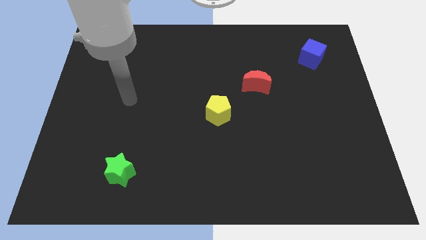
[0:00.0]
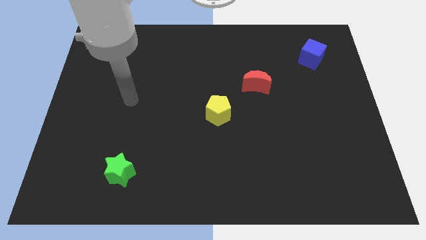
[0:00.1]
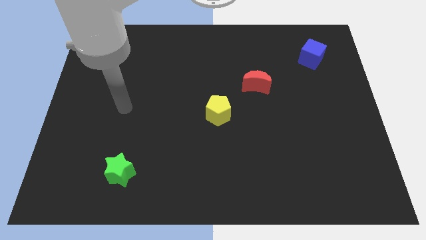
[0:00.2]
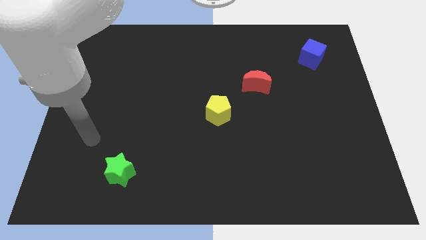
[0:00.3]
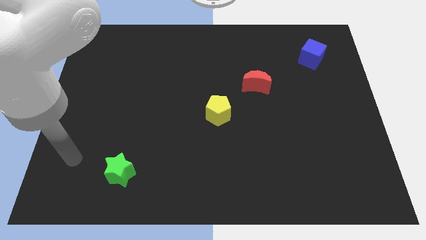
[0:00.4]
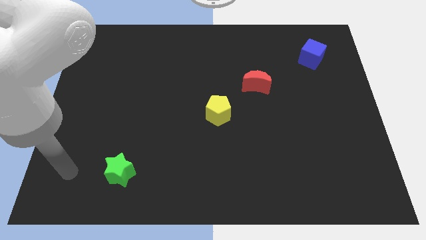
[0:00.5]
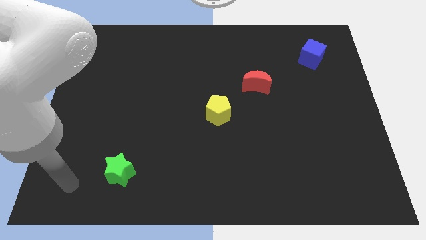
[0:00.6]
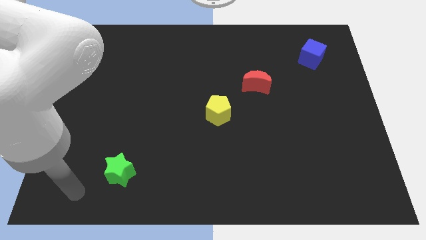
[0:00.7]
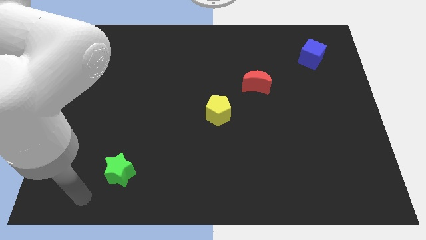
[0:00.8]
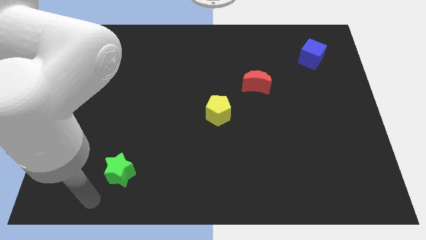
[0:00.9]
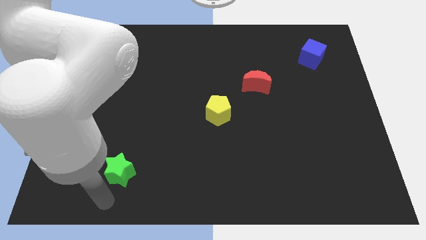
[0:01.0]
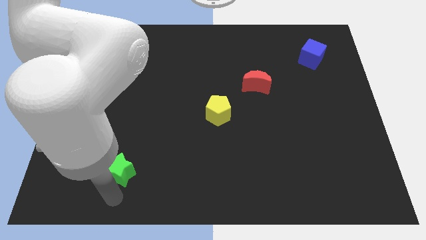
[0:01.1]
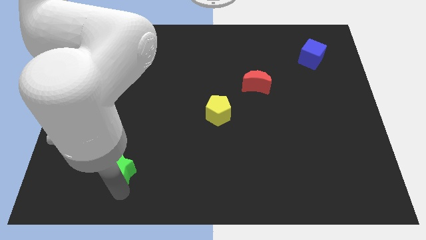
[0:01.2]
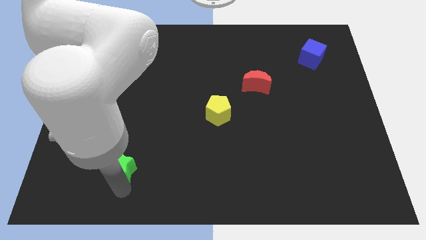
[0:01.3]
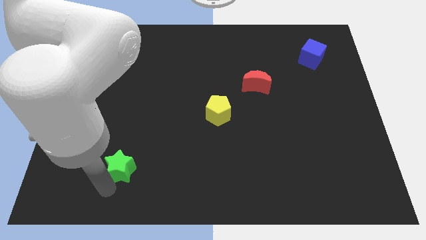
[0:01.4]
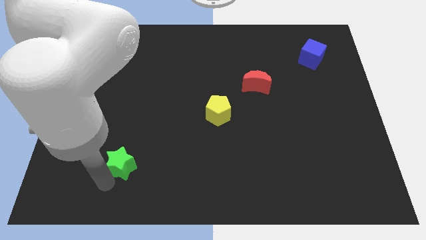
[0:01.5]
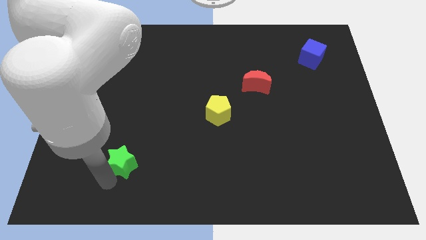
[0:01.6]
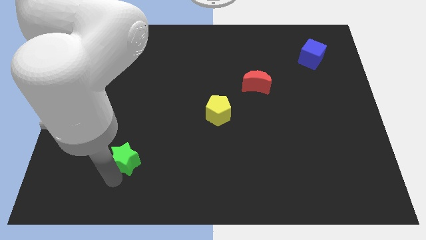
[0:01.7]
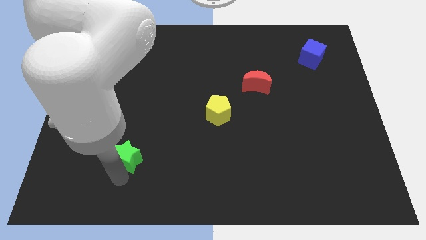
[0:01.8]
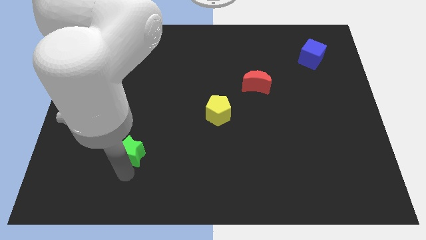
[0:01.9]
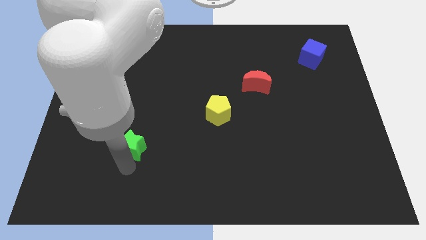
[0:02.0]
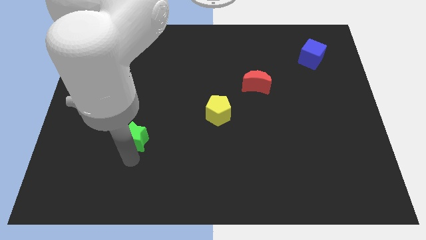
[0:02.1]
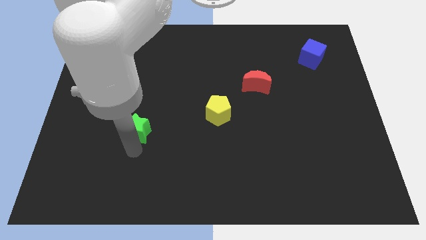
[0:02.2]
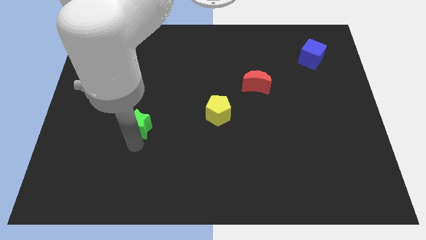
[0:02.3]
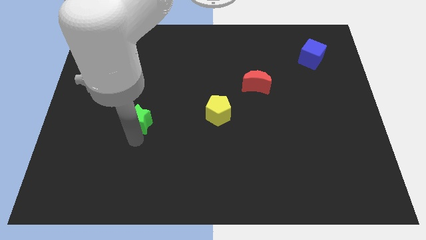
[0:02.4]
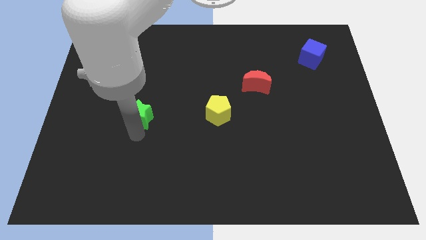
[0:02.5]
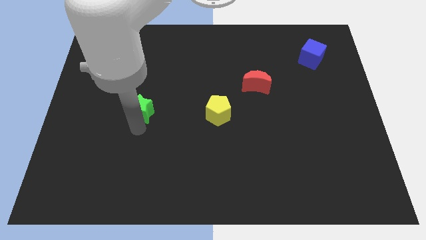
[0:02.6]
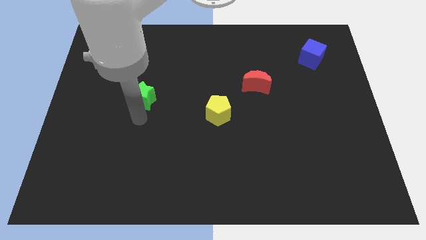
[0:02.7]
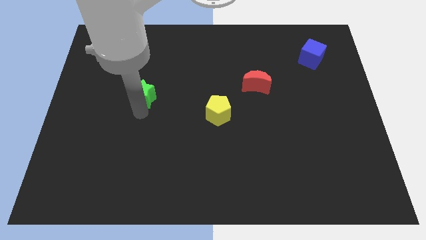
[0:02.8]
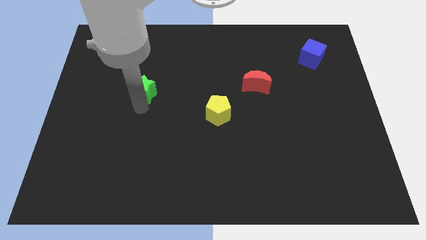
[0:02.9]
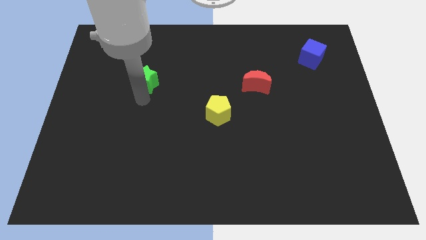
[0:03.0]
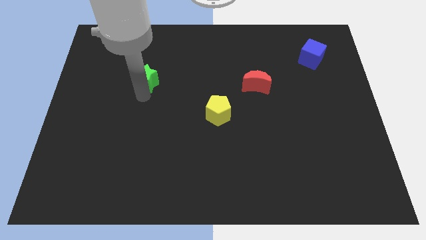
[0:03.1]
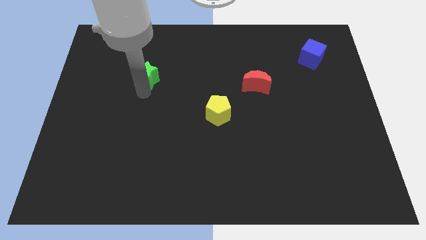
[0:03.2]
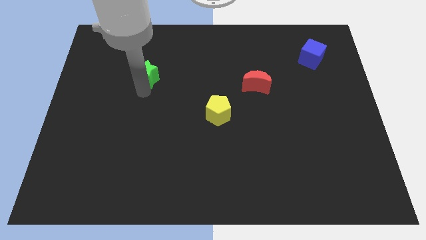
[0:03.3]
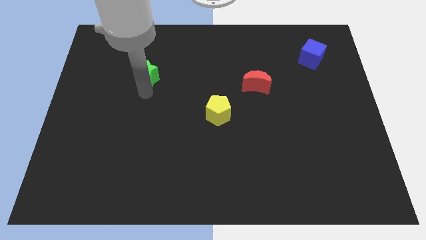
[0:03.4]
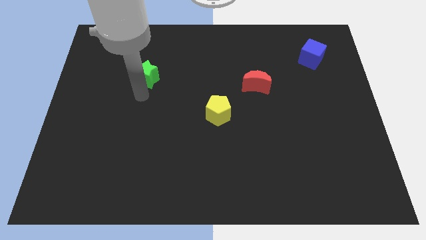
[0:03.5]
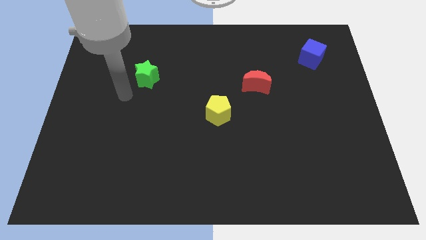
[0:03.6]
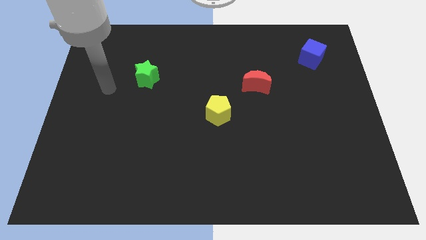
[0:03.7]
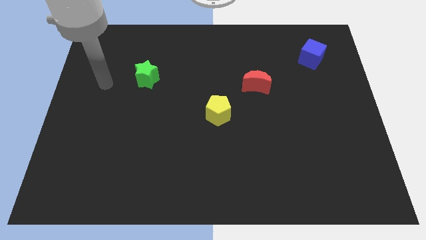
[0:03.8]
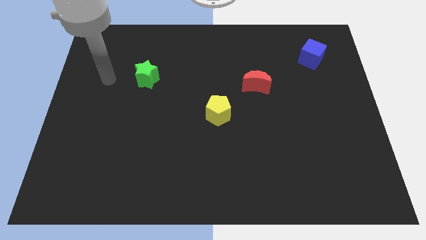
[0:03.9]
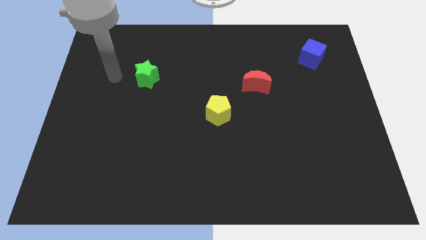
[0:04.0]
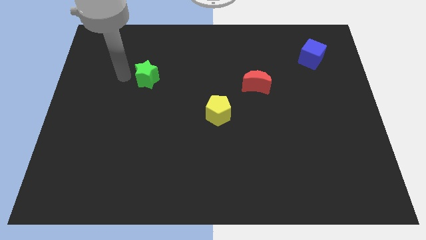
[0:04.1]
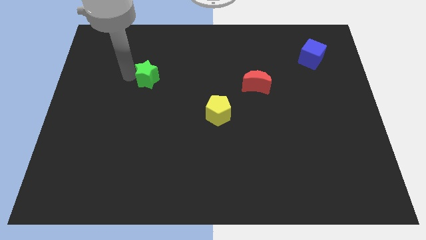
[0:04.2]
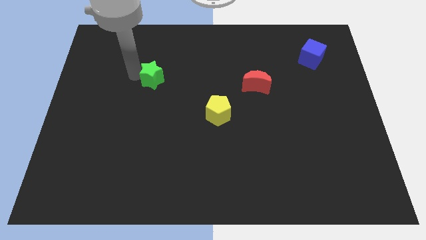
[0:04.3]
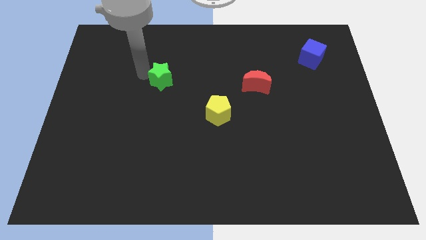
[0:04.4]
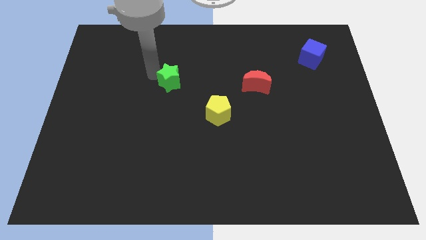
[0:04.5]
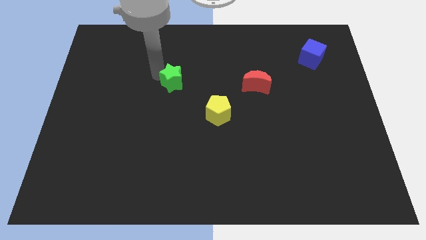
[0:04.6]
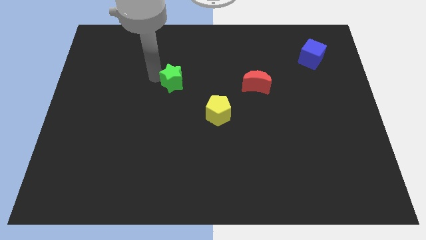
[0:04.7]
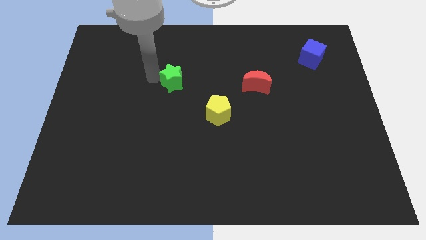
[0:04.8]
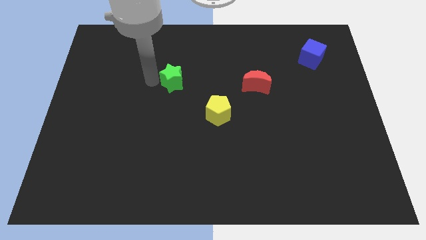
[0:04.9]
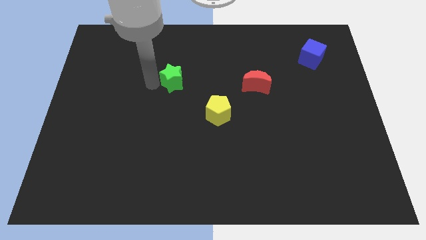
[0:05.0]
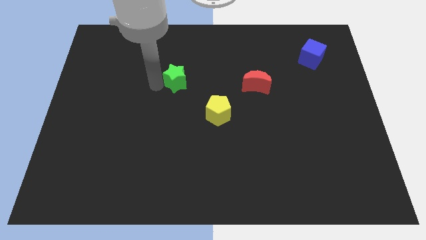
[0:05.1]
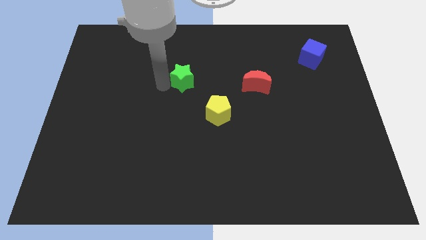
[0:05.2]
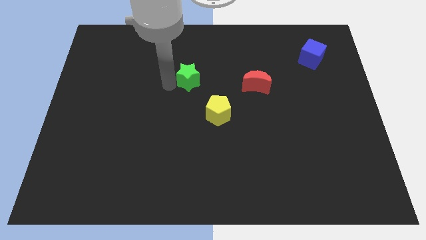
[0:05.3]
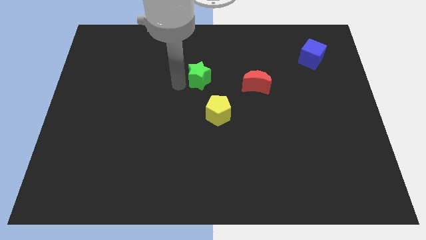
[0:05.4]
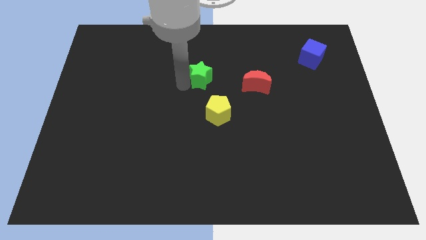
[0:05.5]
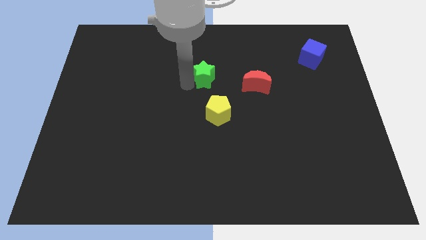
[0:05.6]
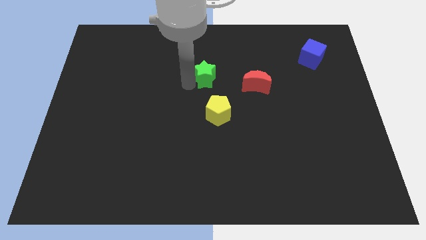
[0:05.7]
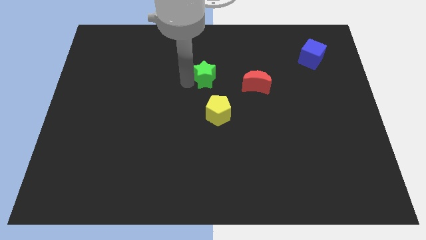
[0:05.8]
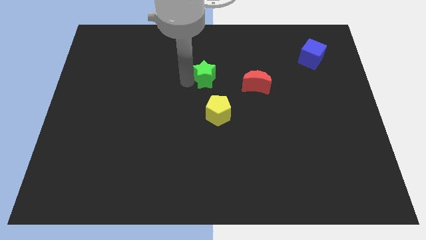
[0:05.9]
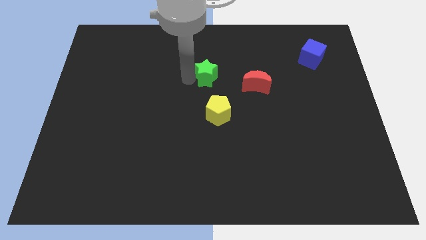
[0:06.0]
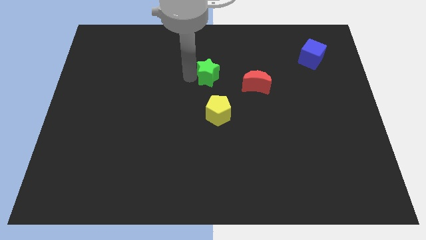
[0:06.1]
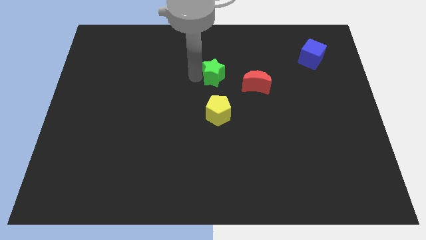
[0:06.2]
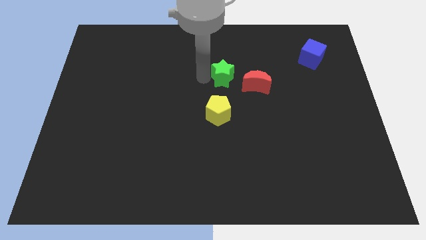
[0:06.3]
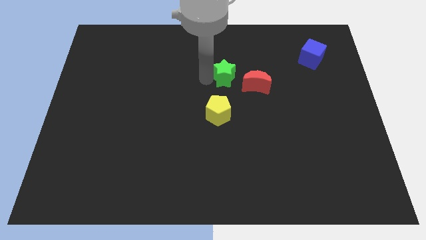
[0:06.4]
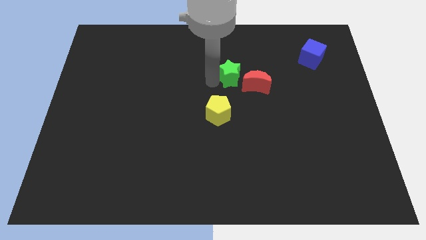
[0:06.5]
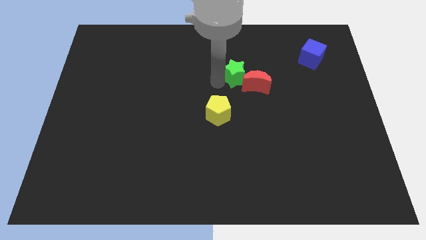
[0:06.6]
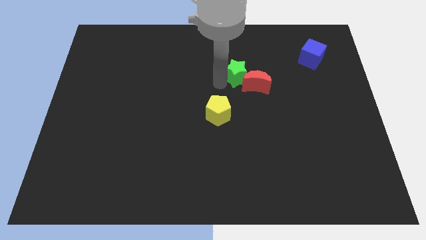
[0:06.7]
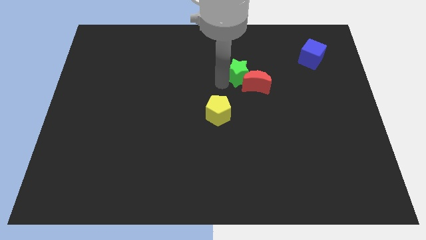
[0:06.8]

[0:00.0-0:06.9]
push the green star towards the moon

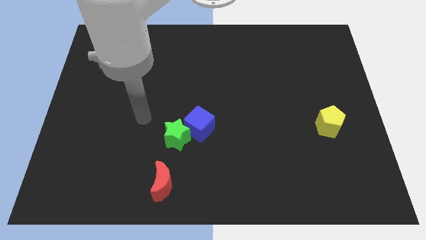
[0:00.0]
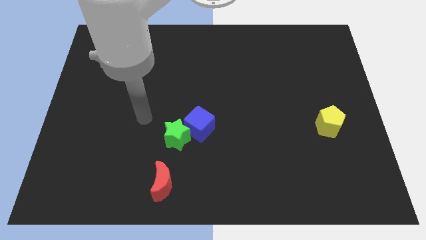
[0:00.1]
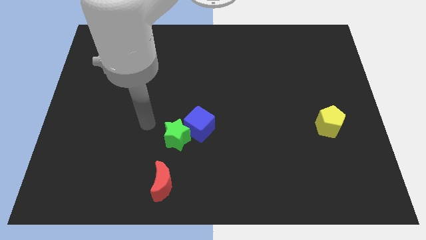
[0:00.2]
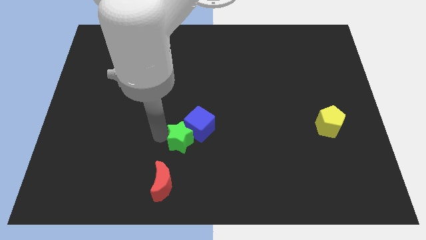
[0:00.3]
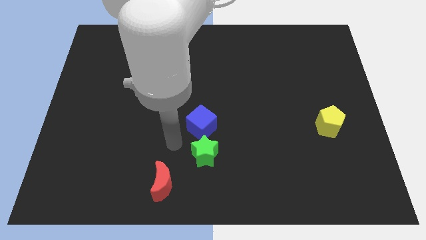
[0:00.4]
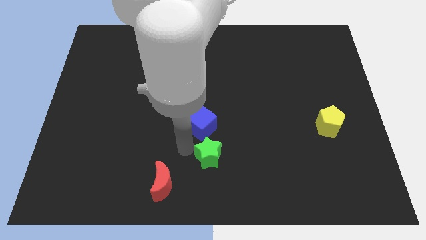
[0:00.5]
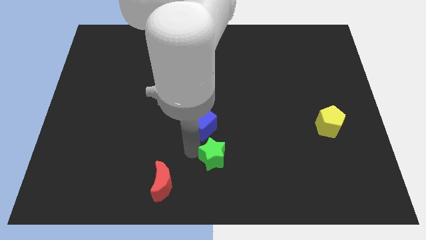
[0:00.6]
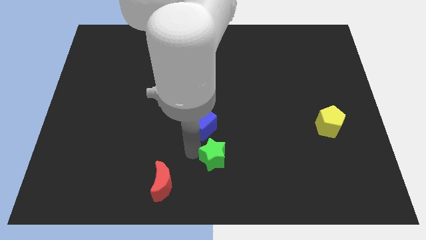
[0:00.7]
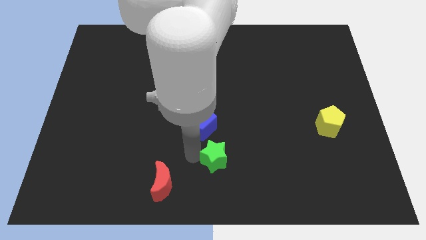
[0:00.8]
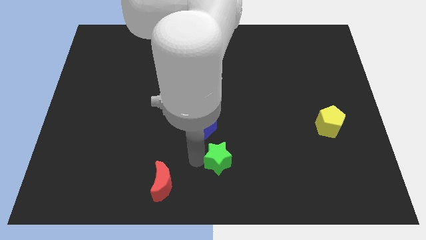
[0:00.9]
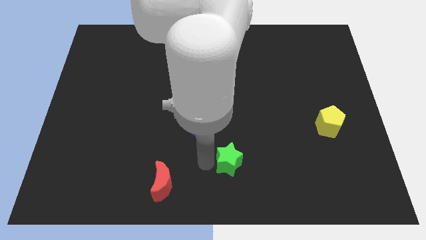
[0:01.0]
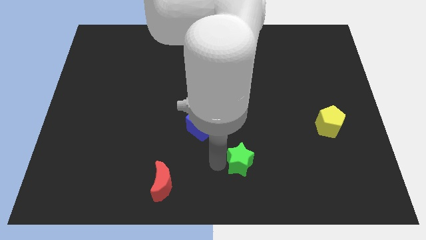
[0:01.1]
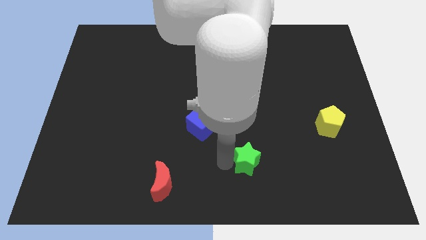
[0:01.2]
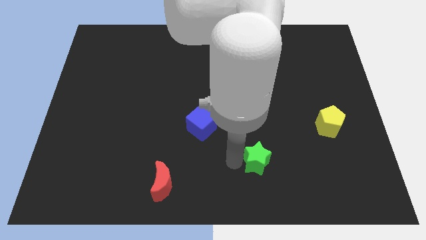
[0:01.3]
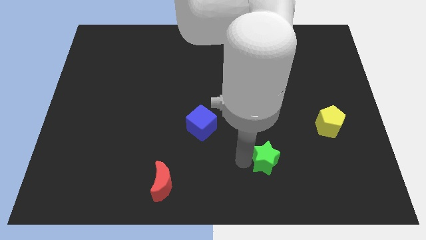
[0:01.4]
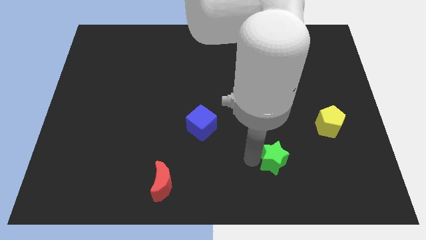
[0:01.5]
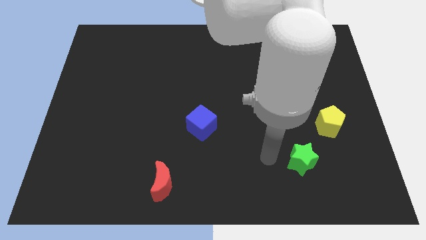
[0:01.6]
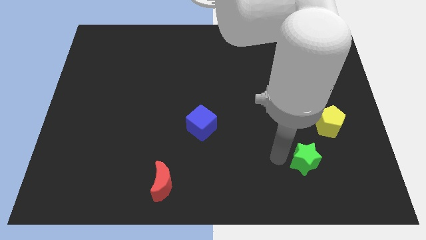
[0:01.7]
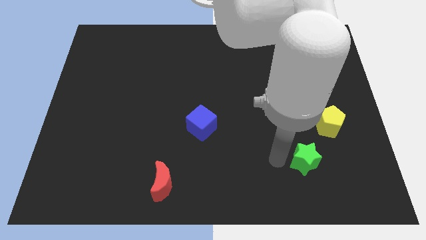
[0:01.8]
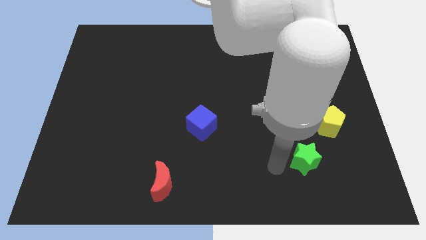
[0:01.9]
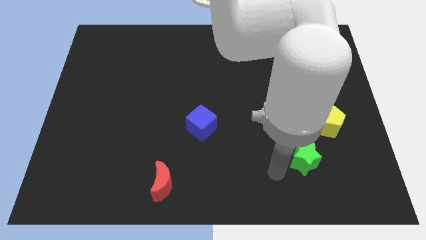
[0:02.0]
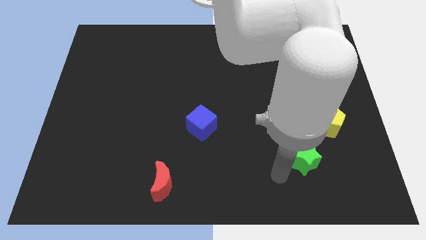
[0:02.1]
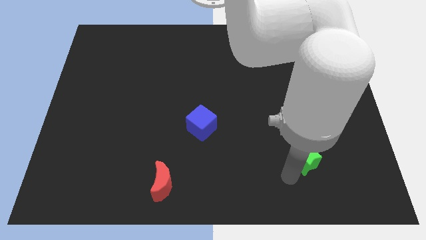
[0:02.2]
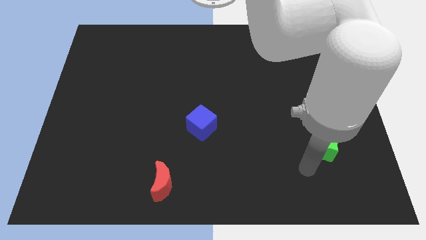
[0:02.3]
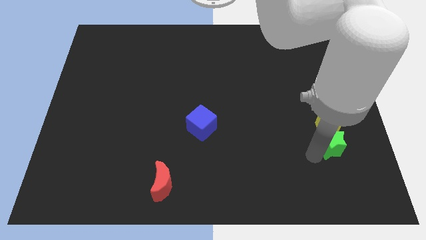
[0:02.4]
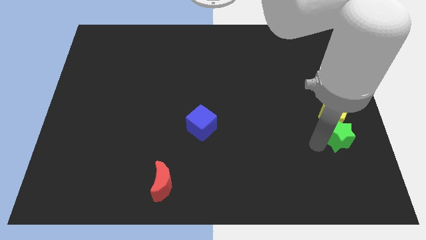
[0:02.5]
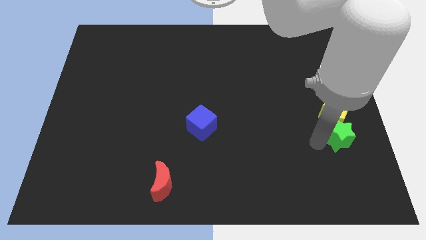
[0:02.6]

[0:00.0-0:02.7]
move the star close to the yellow block
